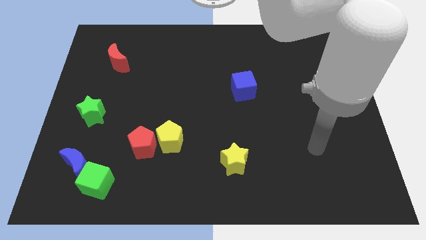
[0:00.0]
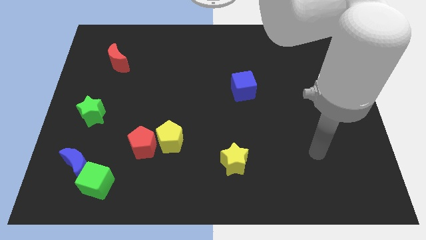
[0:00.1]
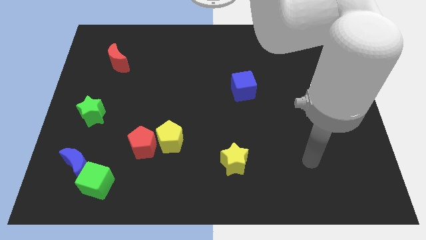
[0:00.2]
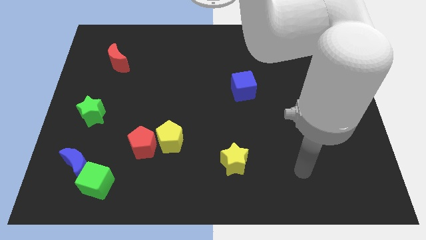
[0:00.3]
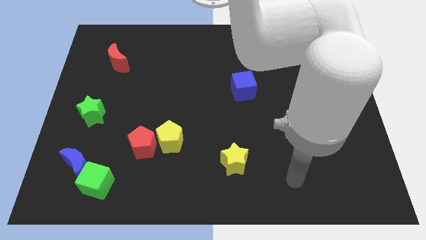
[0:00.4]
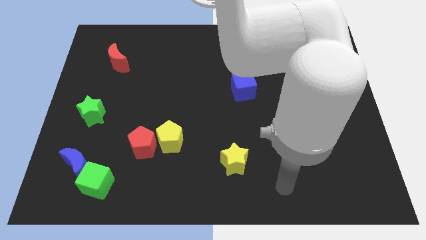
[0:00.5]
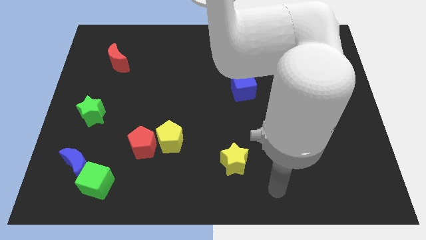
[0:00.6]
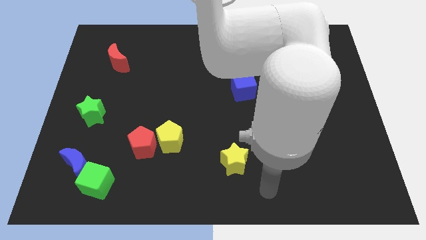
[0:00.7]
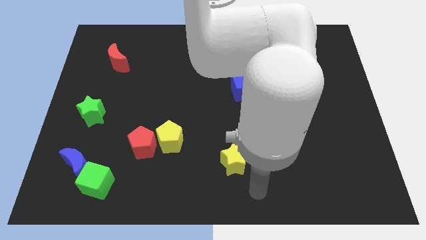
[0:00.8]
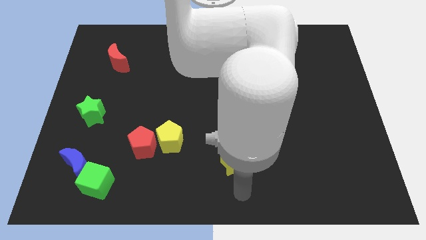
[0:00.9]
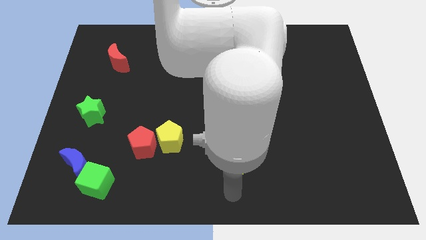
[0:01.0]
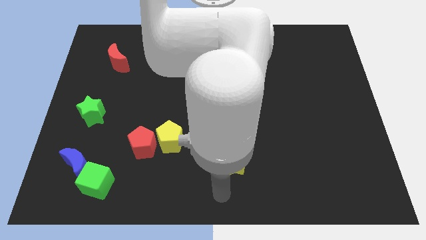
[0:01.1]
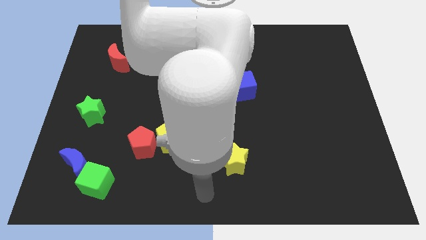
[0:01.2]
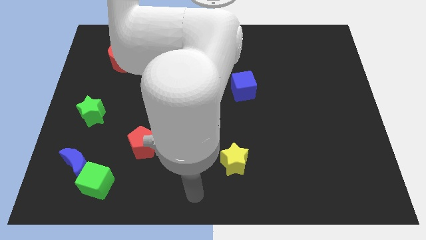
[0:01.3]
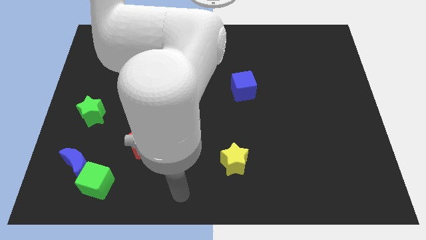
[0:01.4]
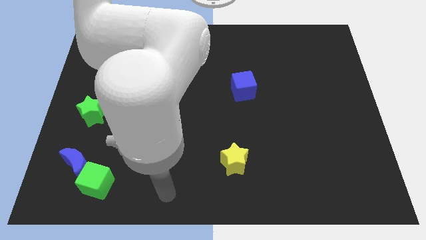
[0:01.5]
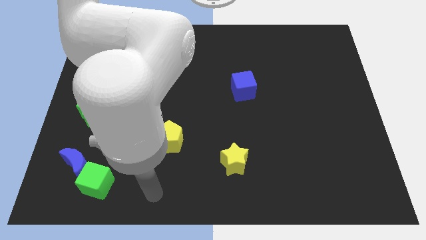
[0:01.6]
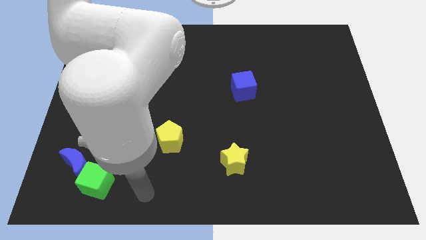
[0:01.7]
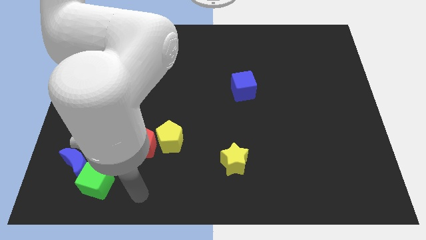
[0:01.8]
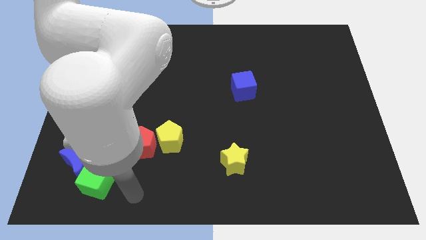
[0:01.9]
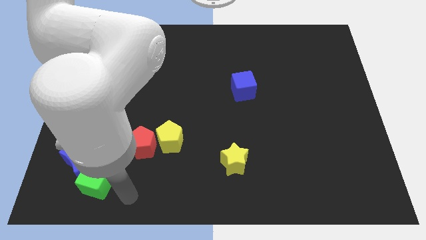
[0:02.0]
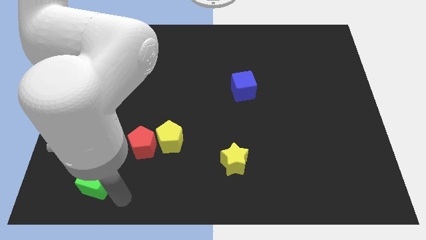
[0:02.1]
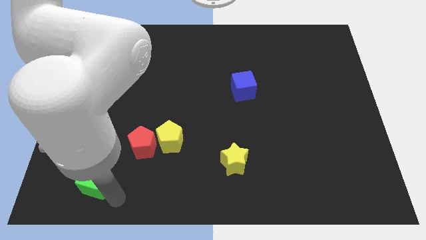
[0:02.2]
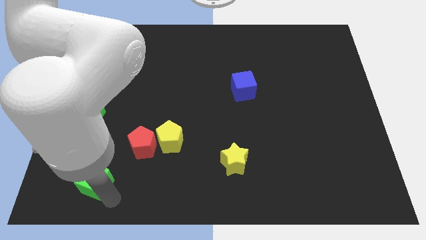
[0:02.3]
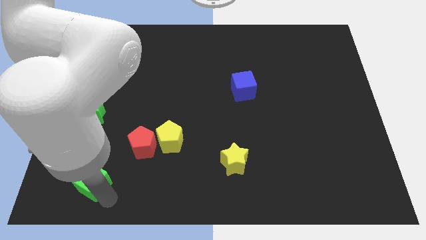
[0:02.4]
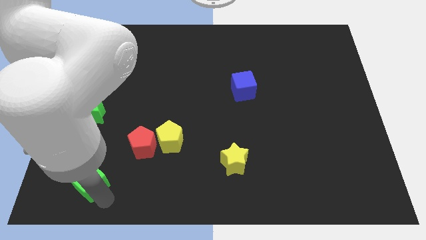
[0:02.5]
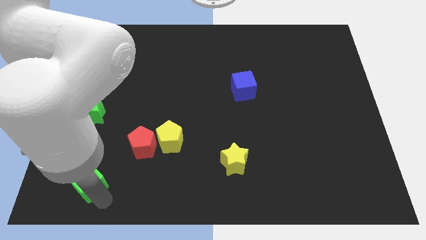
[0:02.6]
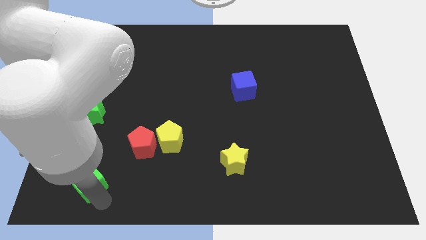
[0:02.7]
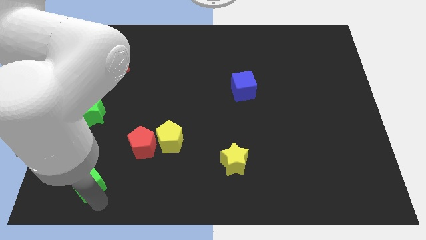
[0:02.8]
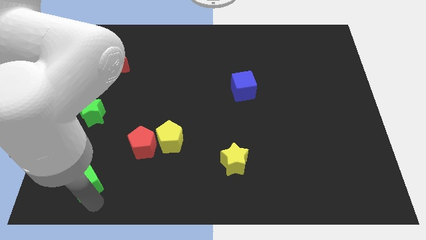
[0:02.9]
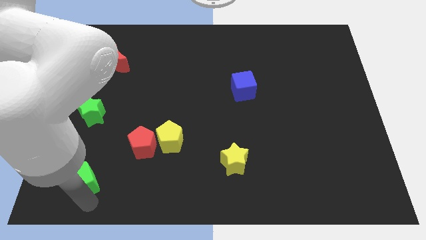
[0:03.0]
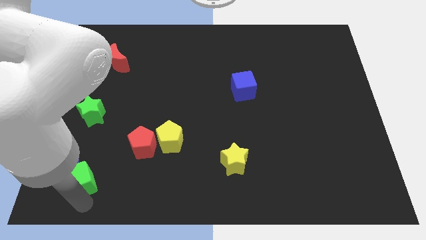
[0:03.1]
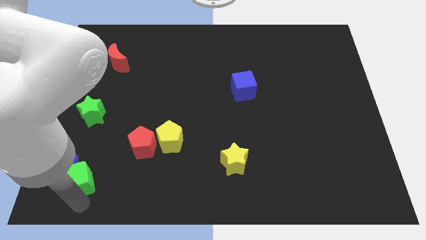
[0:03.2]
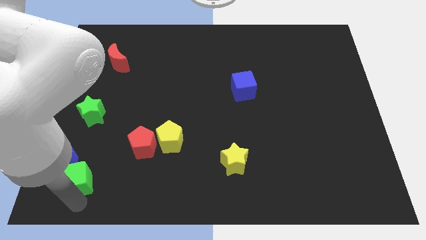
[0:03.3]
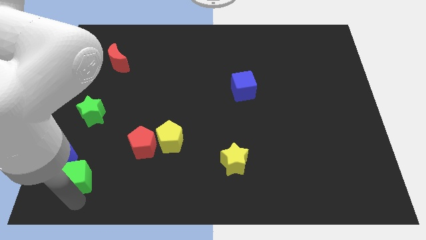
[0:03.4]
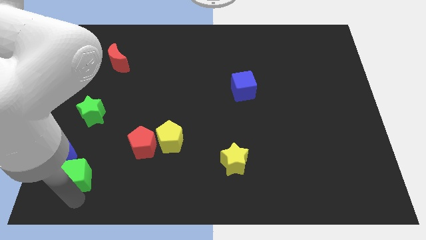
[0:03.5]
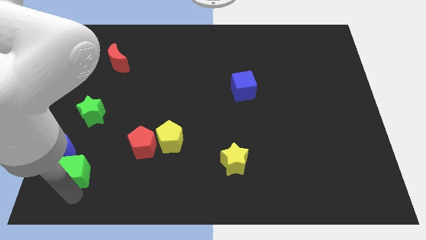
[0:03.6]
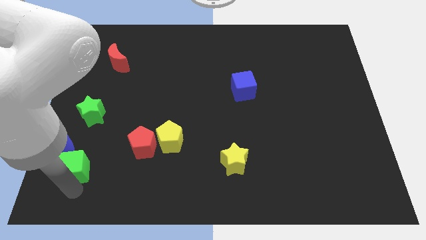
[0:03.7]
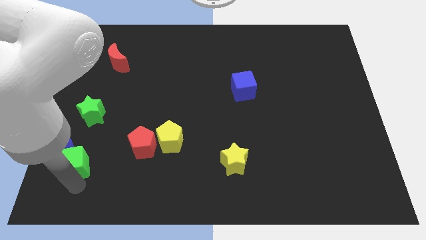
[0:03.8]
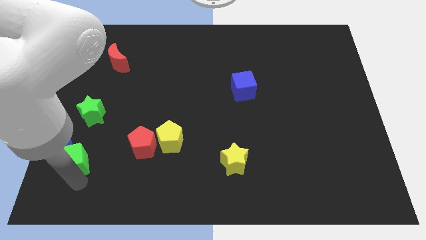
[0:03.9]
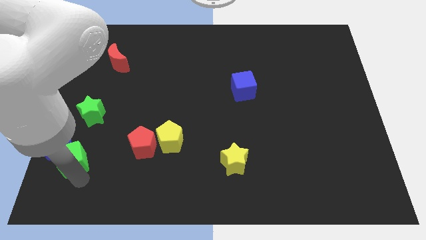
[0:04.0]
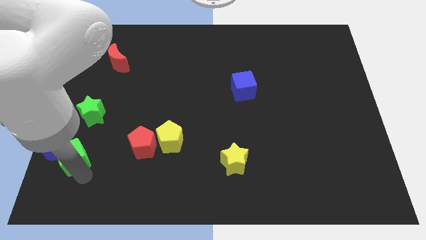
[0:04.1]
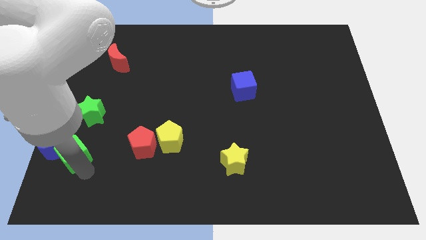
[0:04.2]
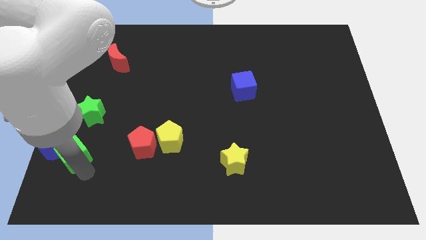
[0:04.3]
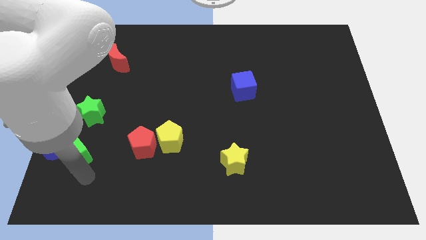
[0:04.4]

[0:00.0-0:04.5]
push the blue crescent using the green cube towards left center of the board

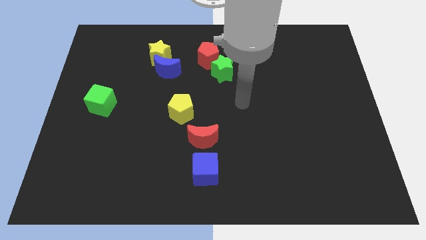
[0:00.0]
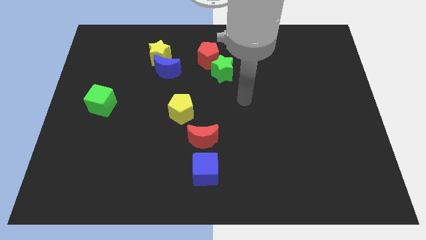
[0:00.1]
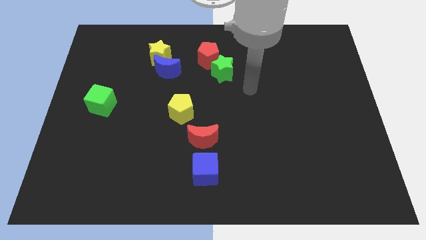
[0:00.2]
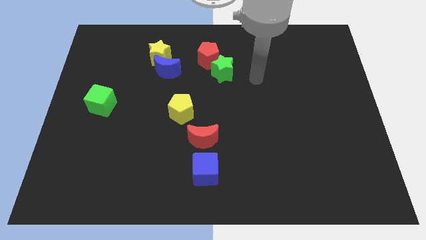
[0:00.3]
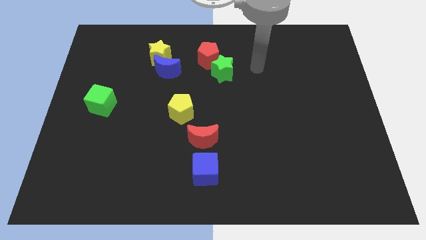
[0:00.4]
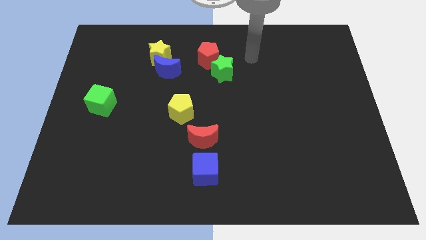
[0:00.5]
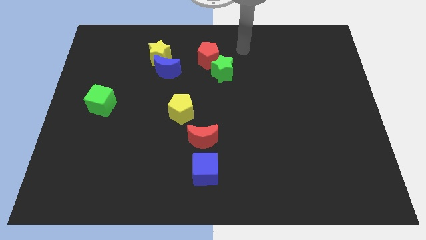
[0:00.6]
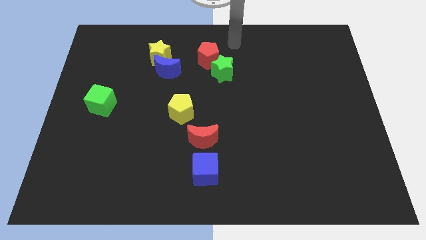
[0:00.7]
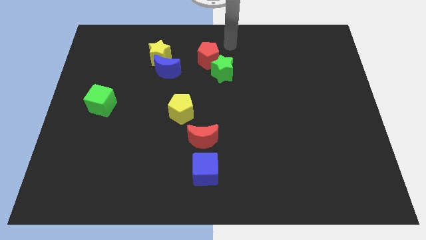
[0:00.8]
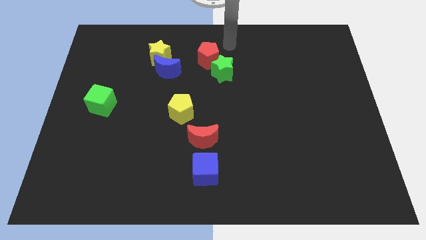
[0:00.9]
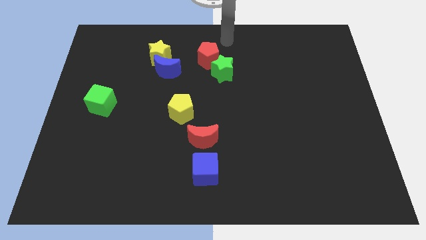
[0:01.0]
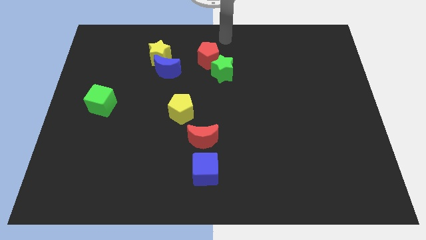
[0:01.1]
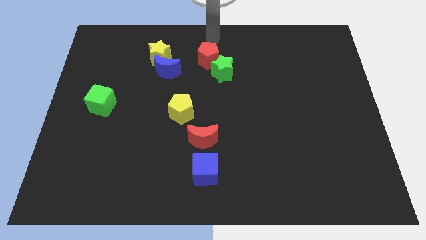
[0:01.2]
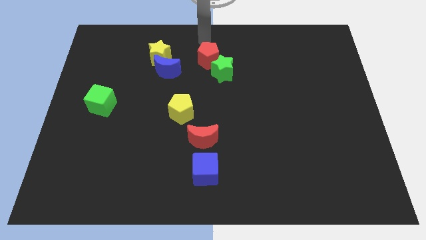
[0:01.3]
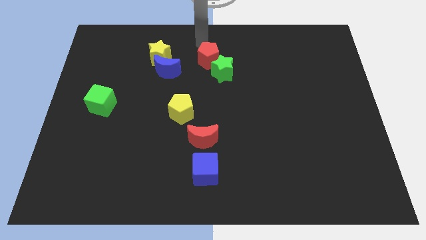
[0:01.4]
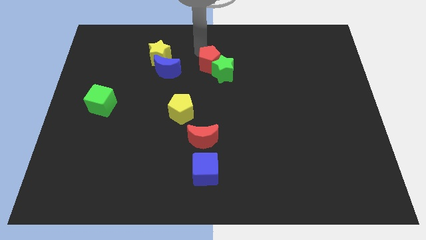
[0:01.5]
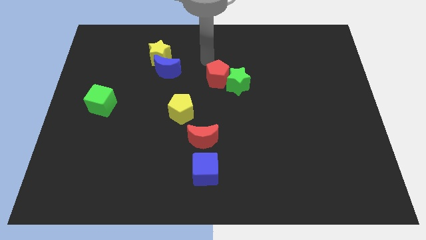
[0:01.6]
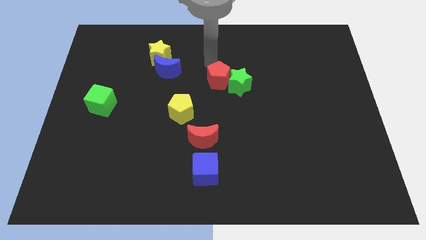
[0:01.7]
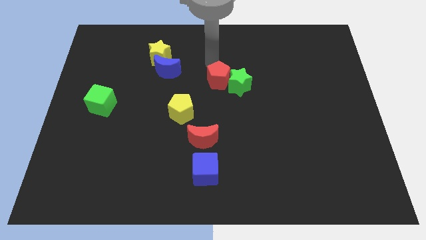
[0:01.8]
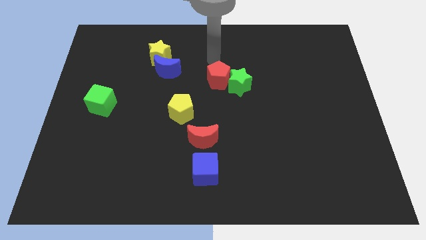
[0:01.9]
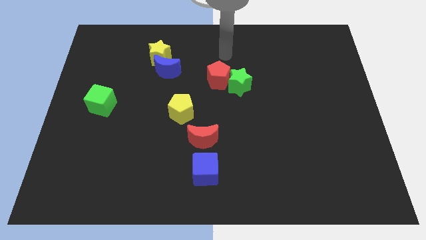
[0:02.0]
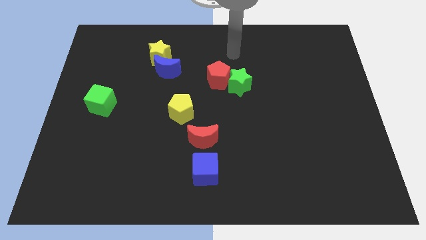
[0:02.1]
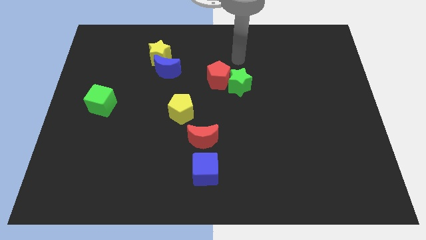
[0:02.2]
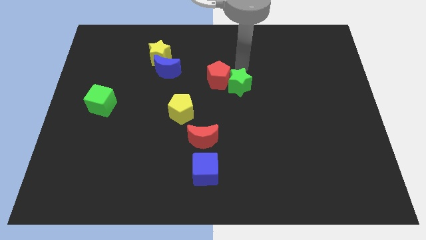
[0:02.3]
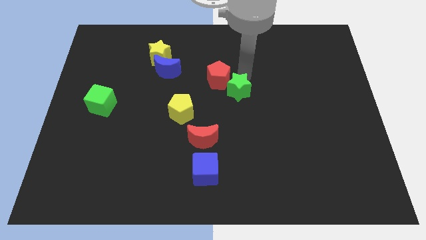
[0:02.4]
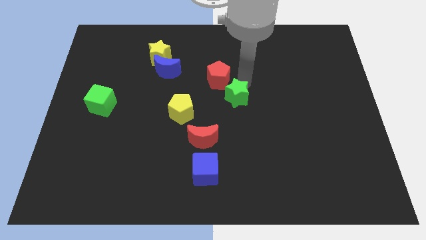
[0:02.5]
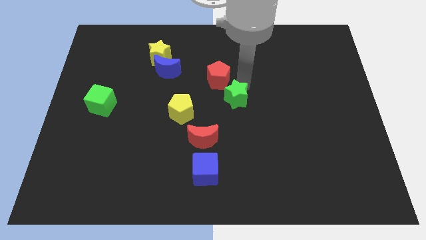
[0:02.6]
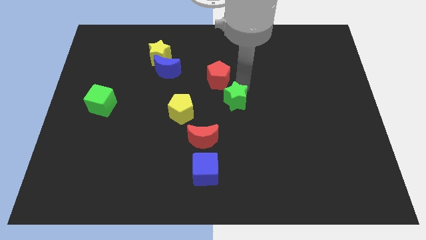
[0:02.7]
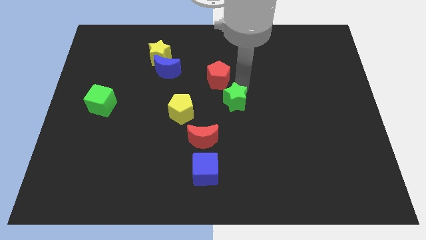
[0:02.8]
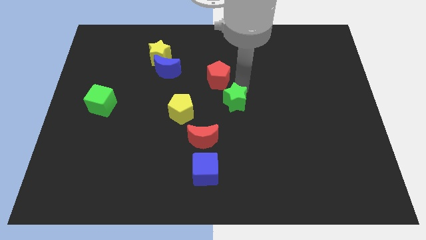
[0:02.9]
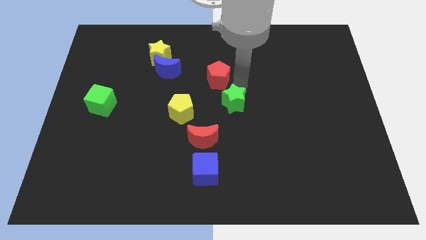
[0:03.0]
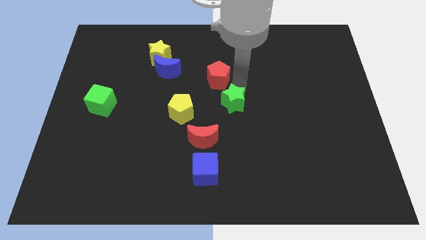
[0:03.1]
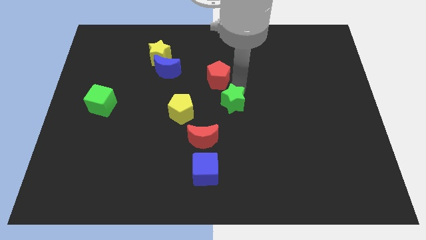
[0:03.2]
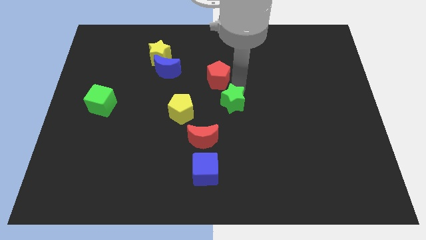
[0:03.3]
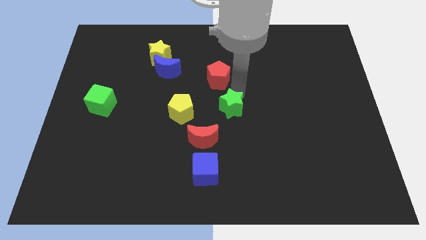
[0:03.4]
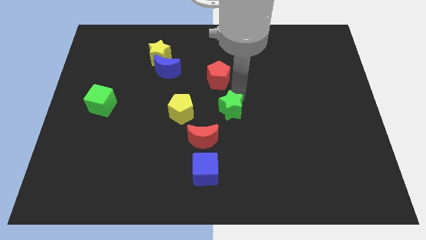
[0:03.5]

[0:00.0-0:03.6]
move the green star to the right of the yellow pentagon

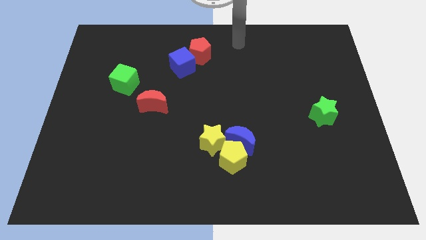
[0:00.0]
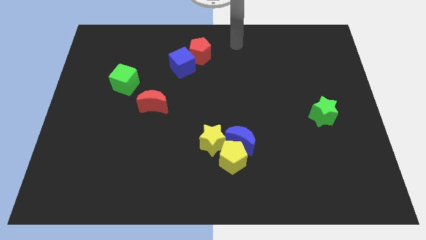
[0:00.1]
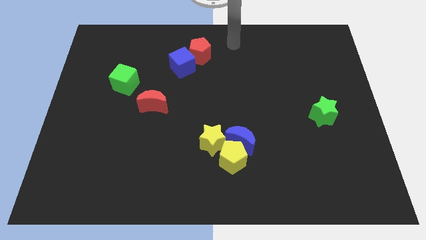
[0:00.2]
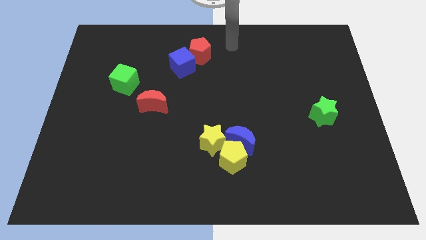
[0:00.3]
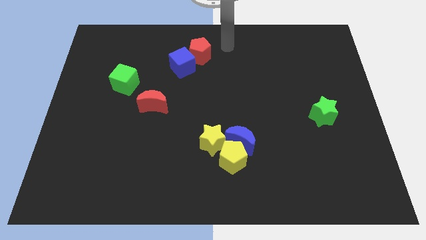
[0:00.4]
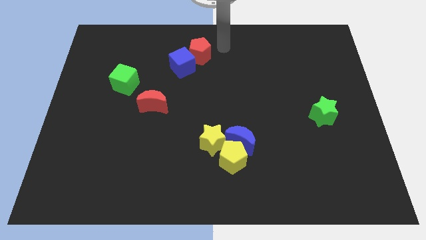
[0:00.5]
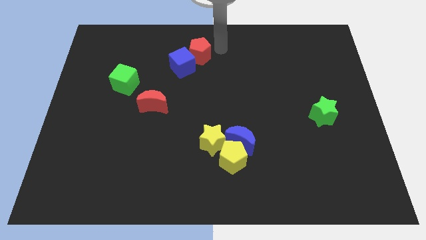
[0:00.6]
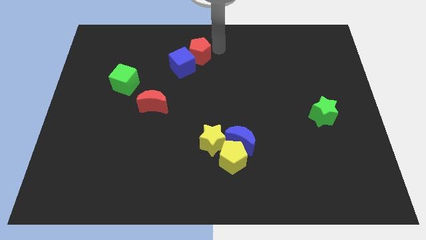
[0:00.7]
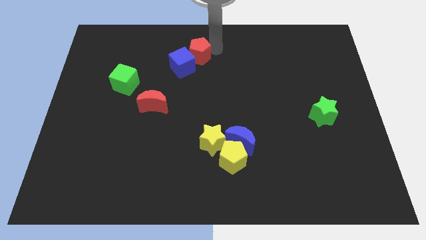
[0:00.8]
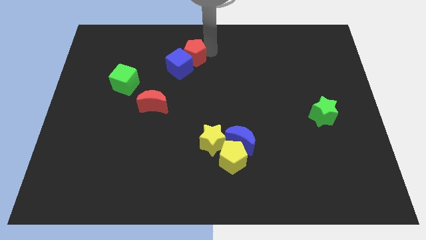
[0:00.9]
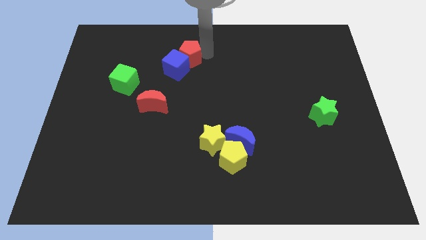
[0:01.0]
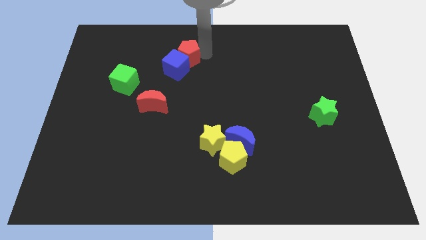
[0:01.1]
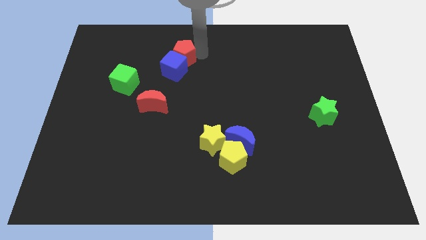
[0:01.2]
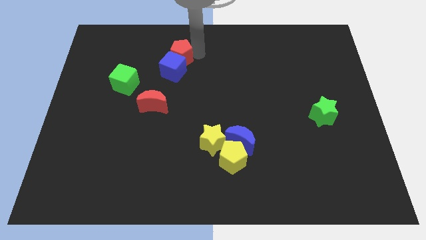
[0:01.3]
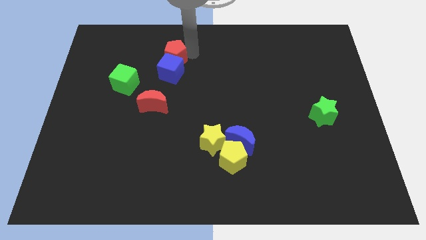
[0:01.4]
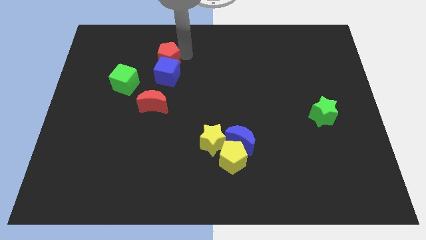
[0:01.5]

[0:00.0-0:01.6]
move the red pentagon to the left
